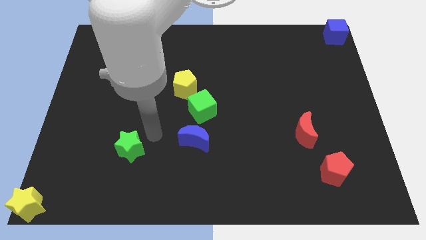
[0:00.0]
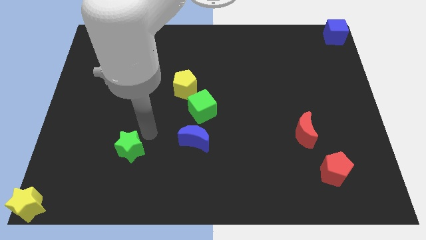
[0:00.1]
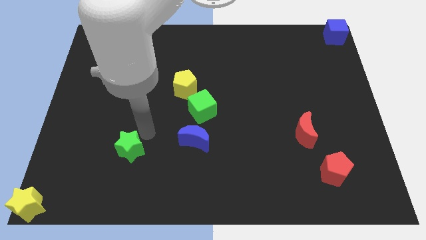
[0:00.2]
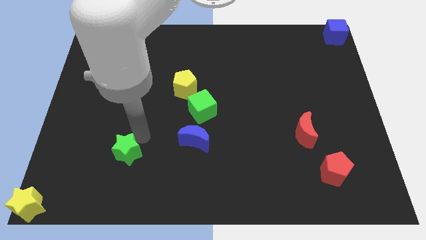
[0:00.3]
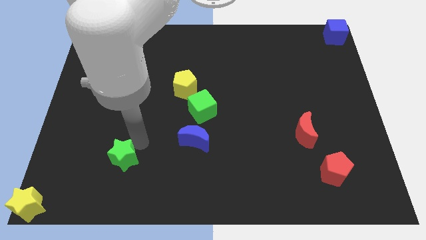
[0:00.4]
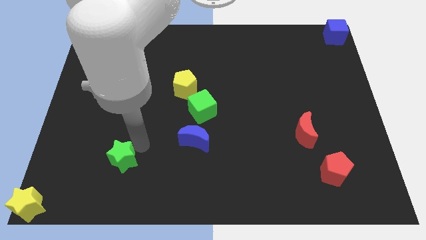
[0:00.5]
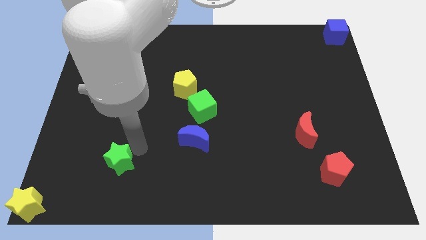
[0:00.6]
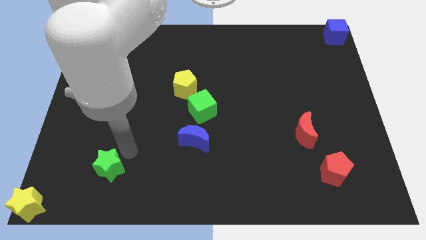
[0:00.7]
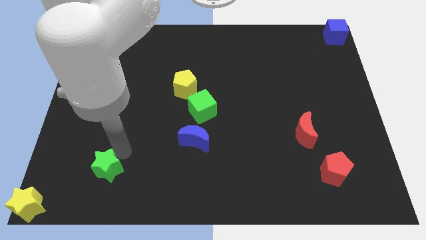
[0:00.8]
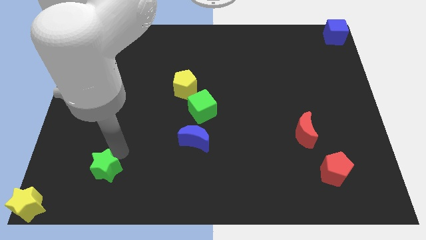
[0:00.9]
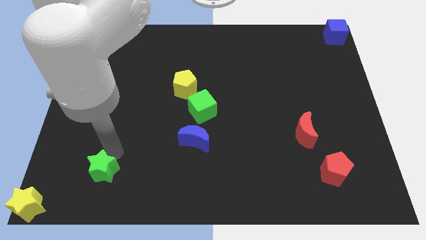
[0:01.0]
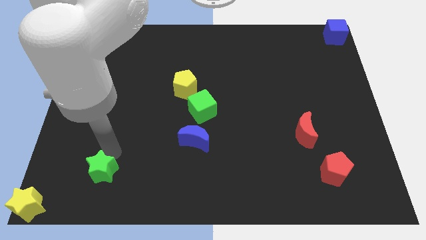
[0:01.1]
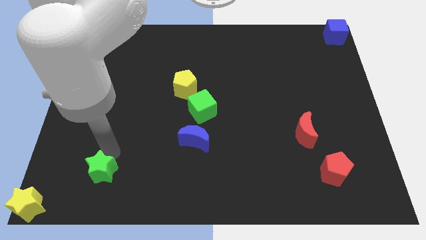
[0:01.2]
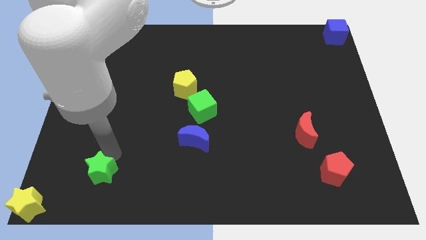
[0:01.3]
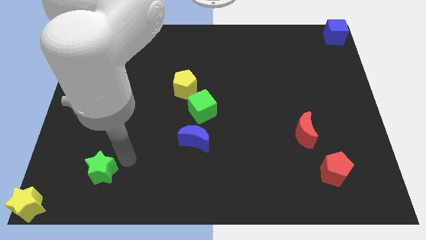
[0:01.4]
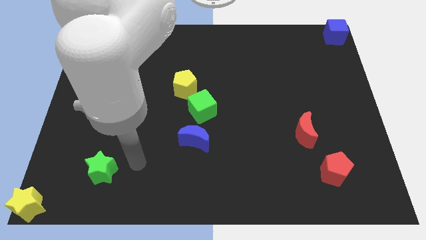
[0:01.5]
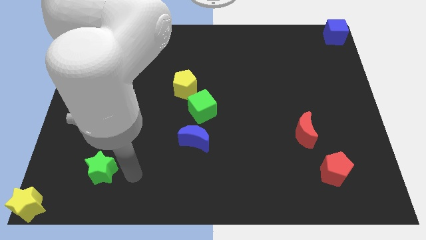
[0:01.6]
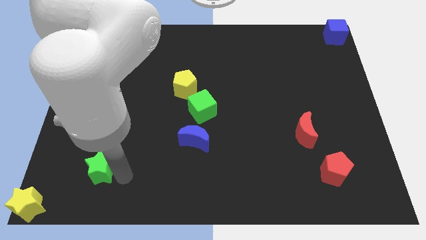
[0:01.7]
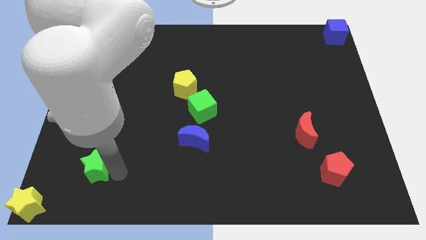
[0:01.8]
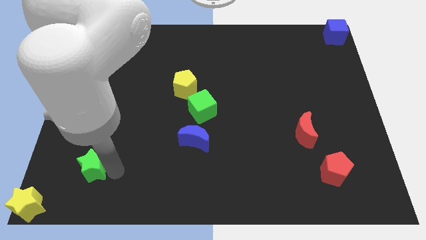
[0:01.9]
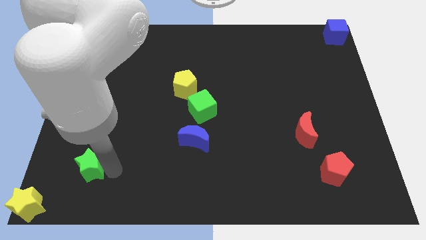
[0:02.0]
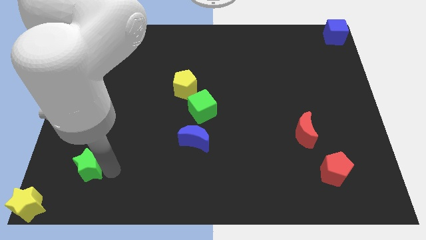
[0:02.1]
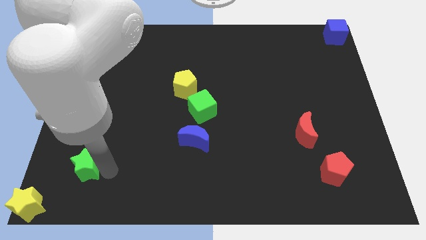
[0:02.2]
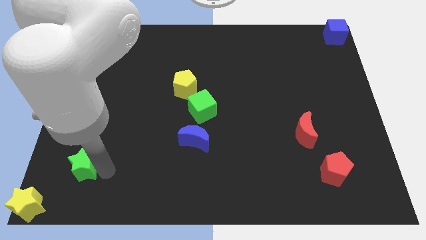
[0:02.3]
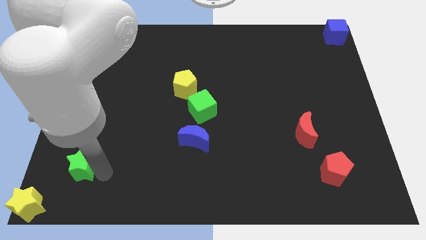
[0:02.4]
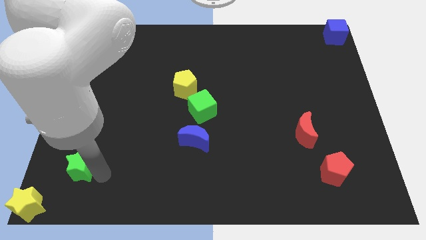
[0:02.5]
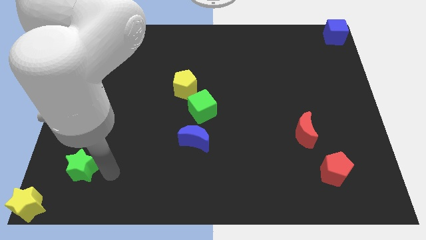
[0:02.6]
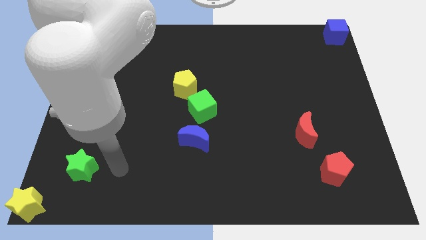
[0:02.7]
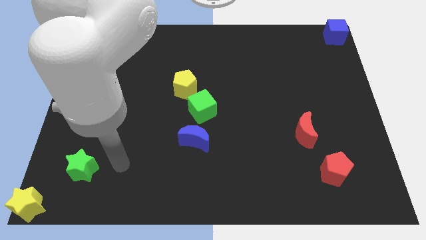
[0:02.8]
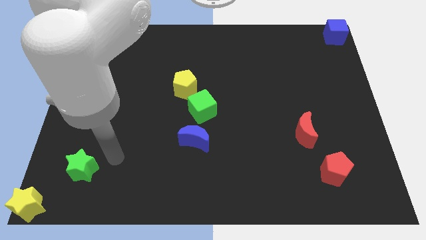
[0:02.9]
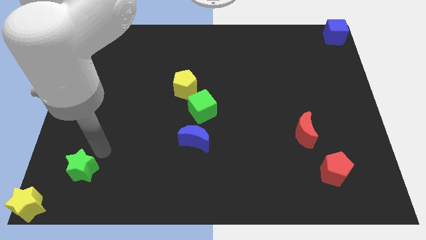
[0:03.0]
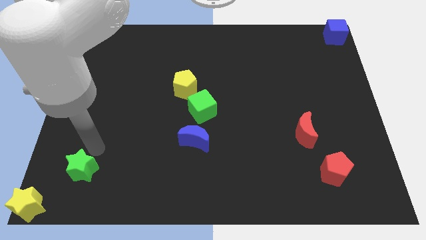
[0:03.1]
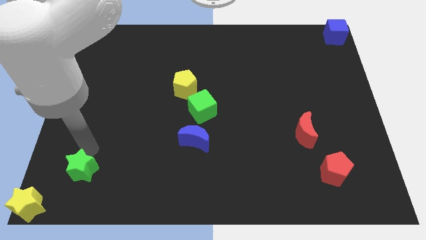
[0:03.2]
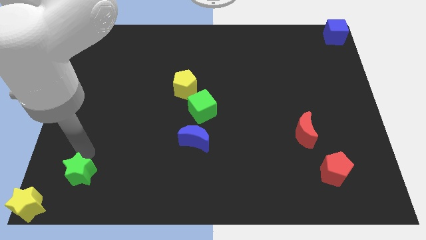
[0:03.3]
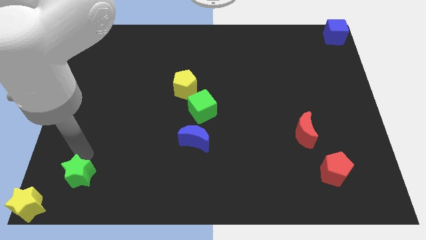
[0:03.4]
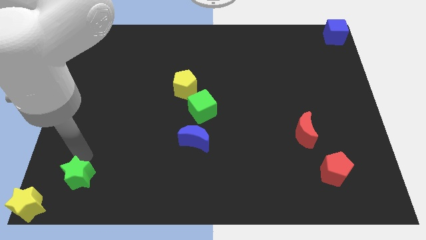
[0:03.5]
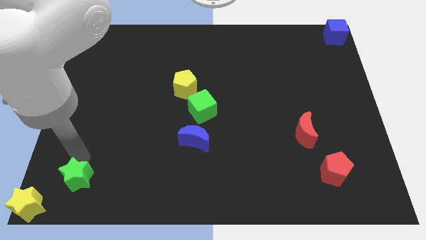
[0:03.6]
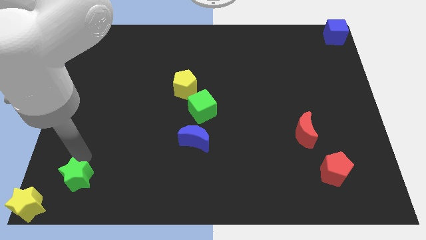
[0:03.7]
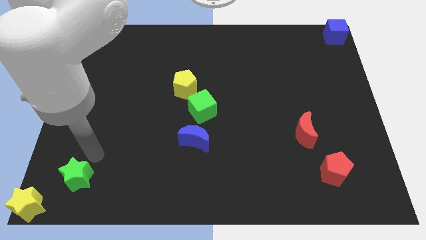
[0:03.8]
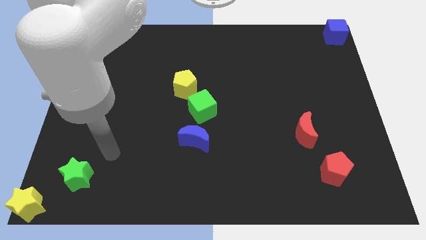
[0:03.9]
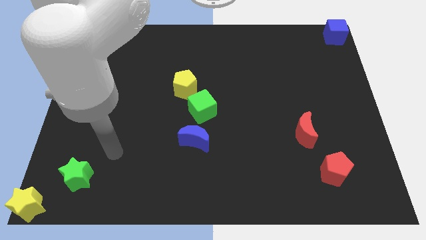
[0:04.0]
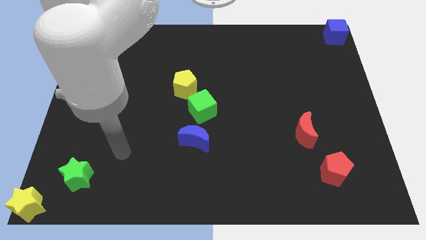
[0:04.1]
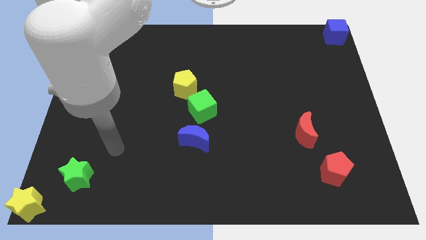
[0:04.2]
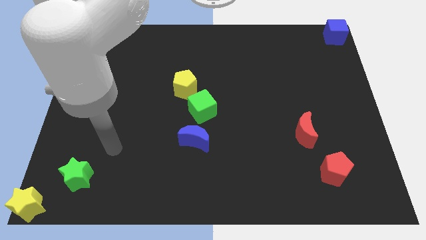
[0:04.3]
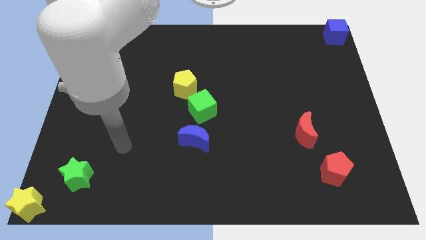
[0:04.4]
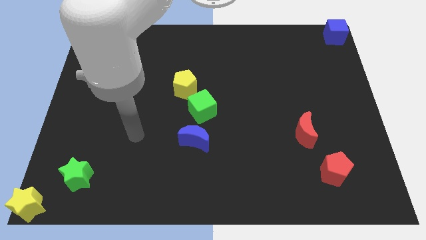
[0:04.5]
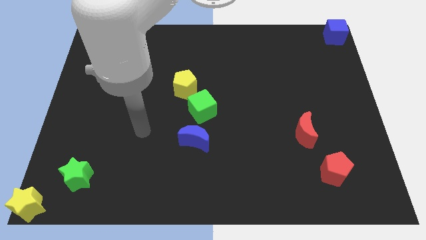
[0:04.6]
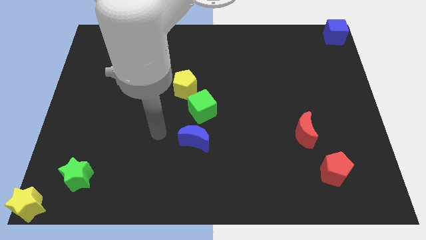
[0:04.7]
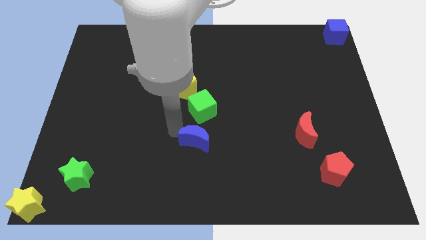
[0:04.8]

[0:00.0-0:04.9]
push the green star to the bottom left corner of the board

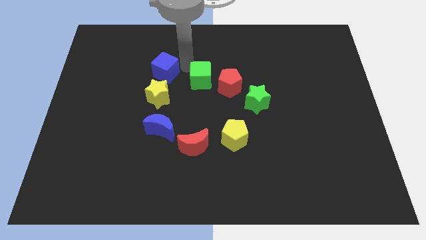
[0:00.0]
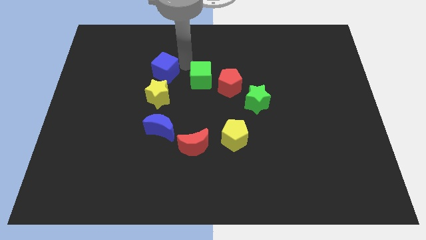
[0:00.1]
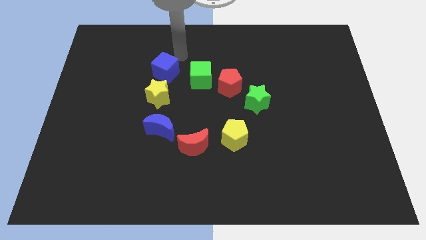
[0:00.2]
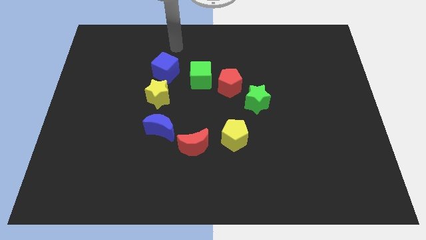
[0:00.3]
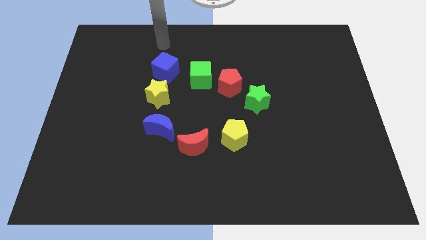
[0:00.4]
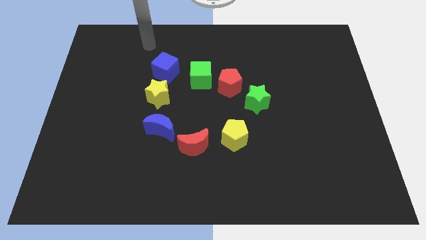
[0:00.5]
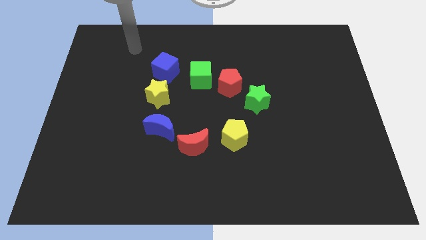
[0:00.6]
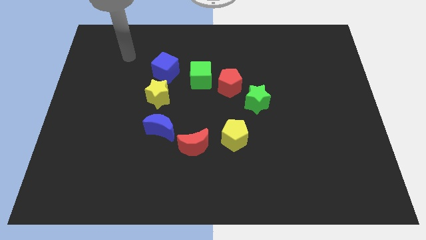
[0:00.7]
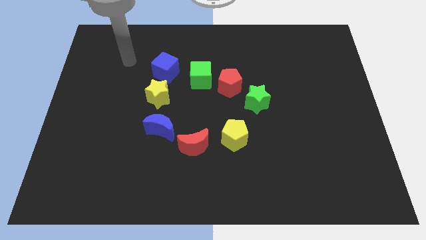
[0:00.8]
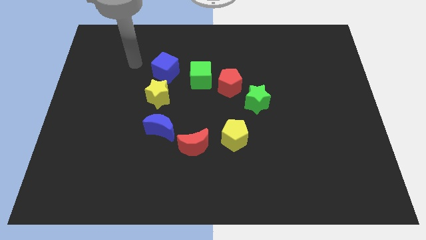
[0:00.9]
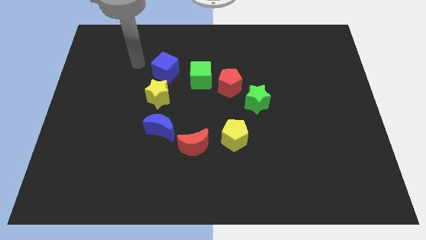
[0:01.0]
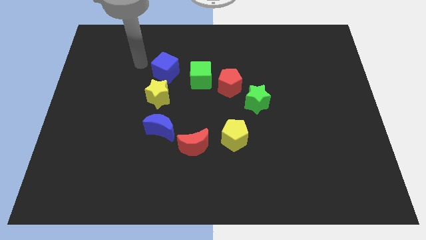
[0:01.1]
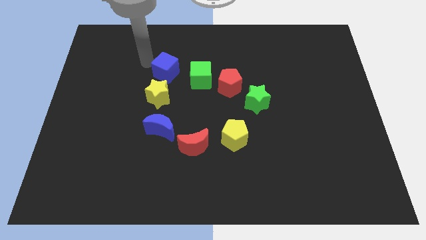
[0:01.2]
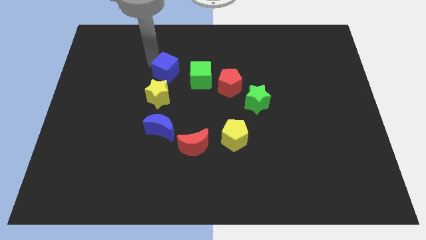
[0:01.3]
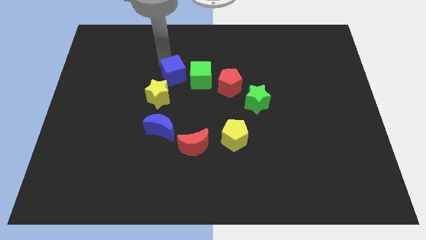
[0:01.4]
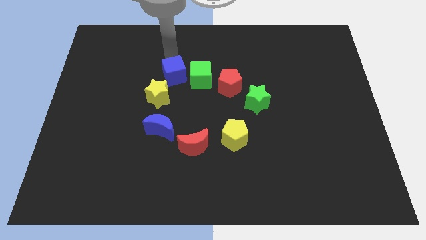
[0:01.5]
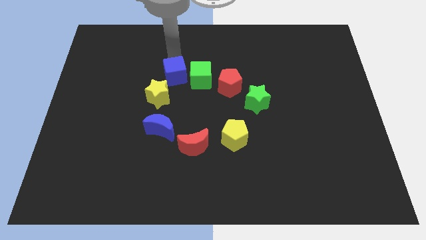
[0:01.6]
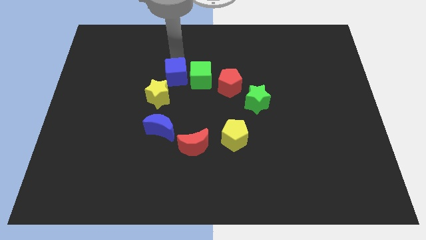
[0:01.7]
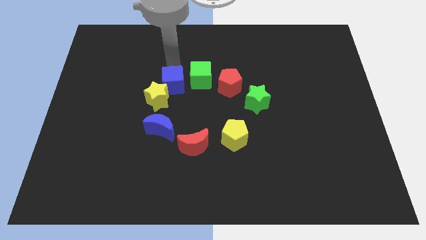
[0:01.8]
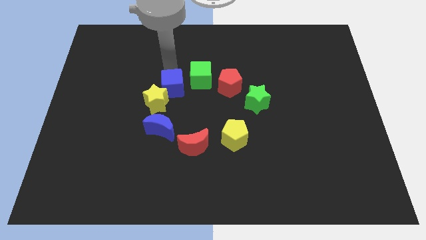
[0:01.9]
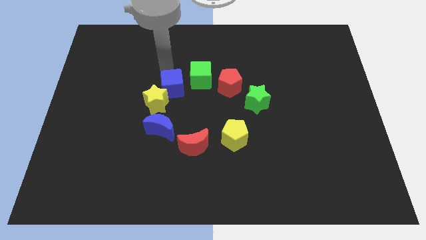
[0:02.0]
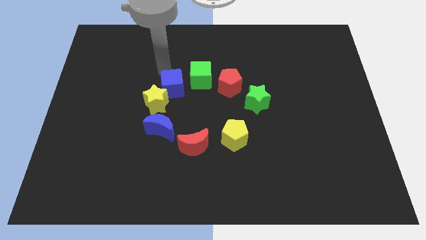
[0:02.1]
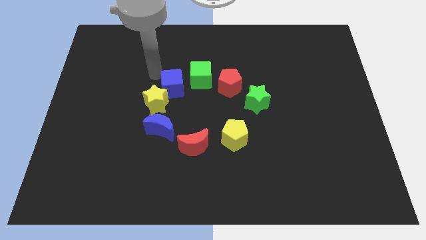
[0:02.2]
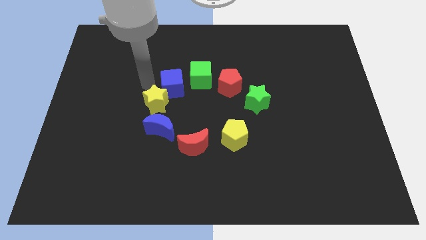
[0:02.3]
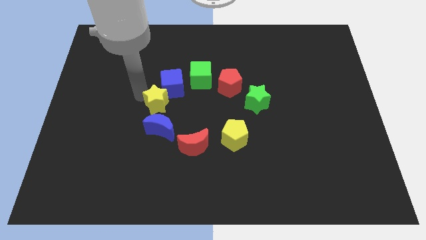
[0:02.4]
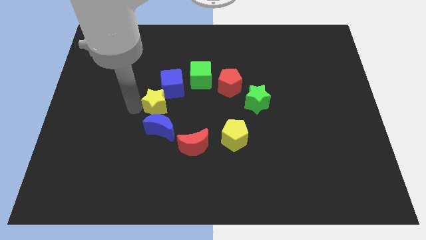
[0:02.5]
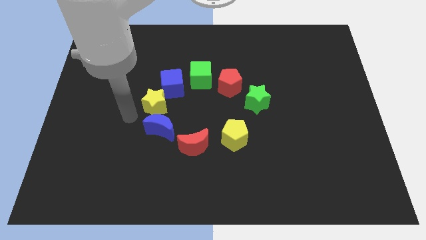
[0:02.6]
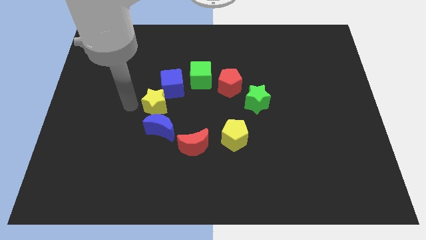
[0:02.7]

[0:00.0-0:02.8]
form a circle at center by pushing the blue cube into yellow star

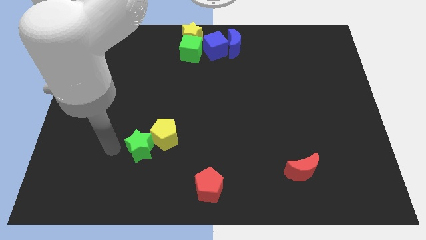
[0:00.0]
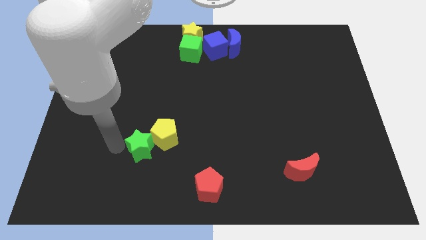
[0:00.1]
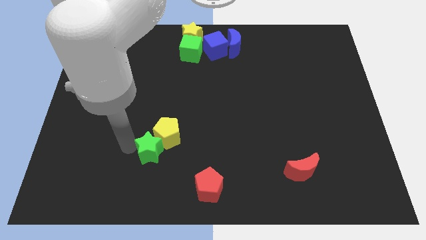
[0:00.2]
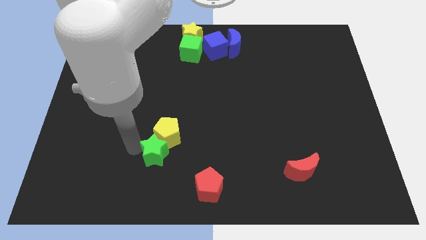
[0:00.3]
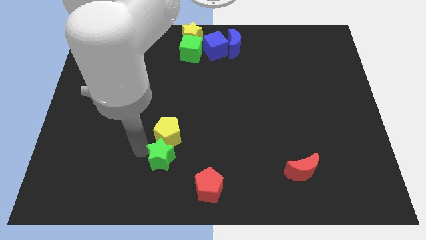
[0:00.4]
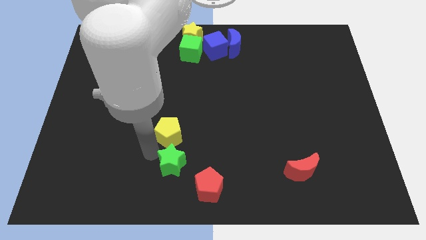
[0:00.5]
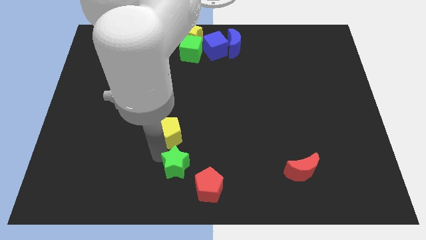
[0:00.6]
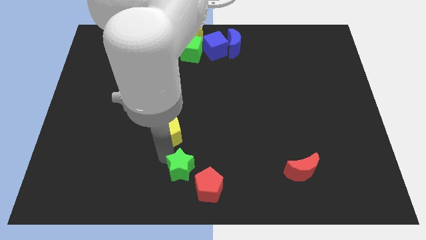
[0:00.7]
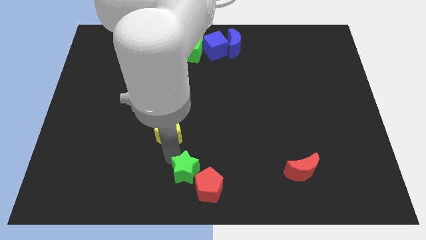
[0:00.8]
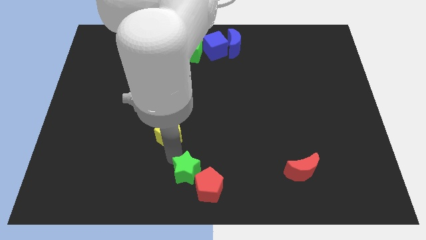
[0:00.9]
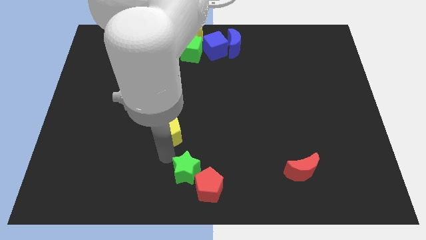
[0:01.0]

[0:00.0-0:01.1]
move green star into red pentagon
